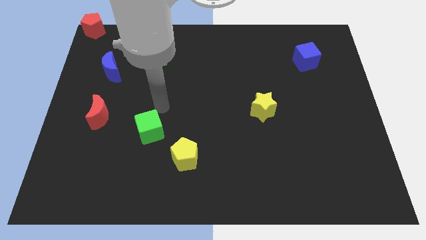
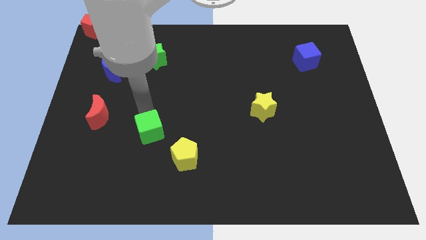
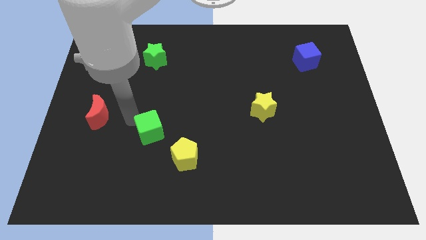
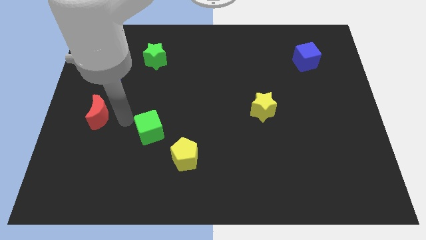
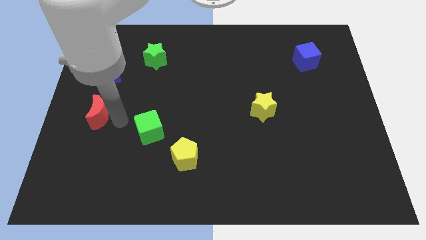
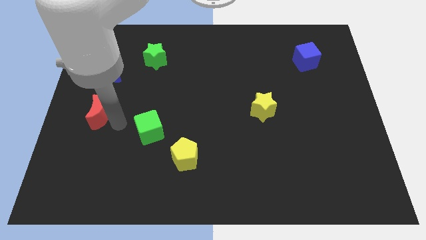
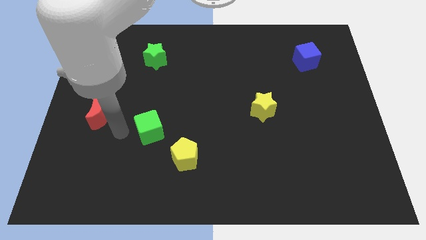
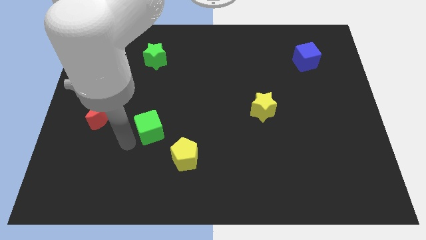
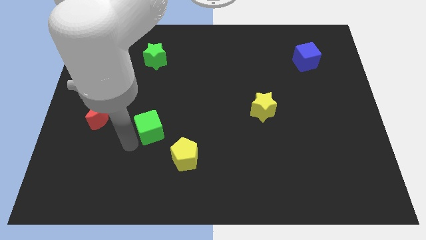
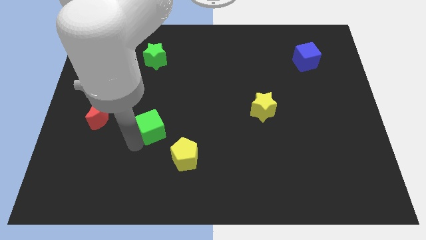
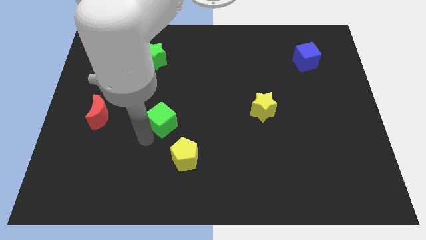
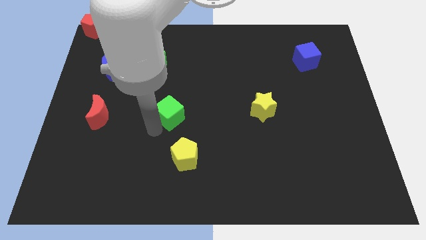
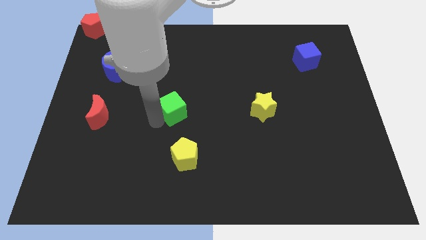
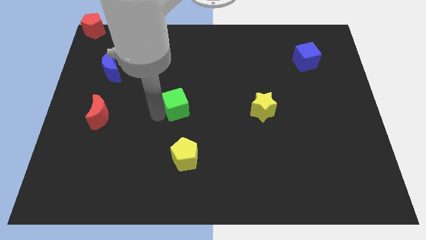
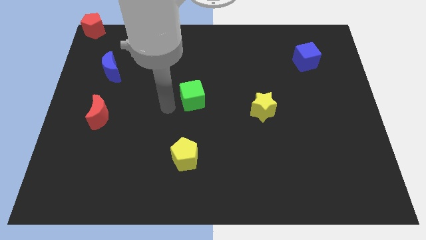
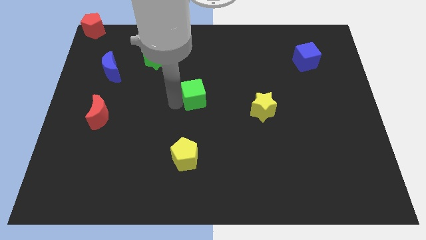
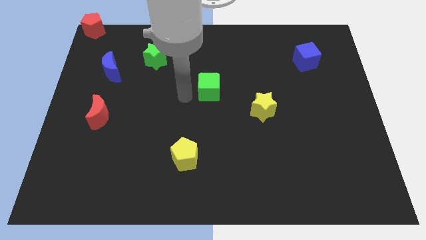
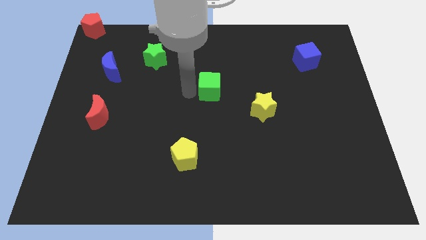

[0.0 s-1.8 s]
move the green cube to the center of the board

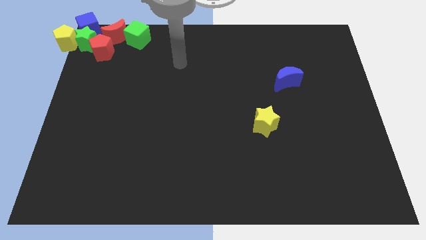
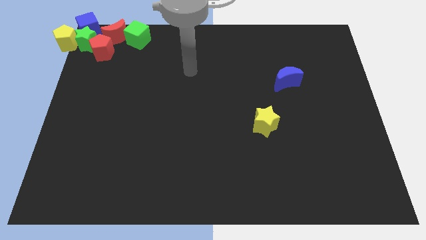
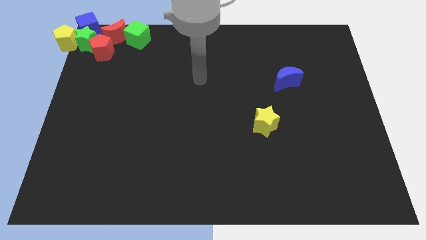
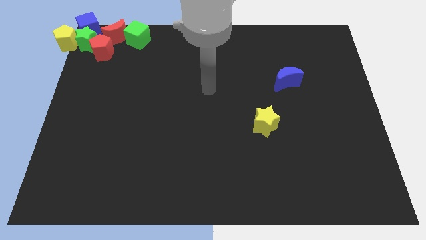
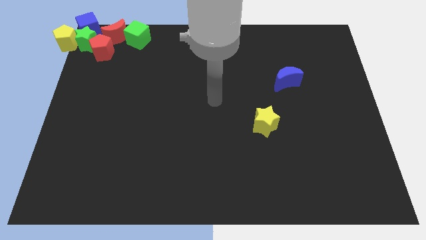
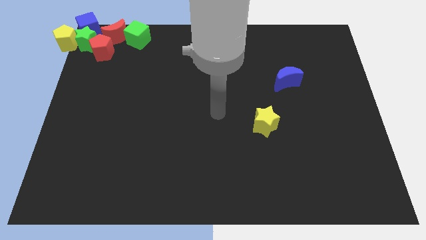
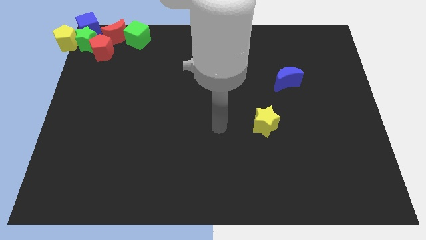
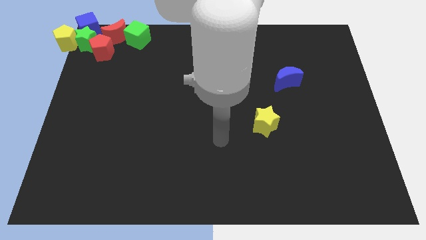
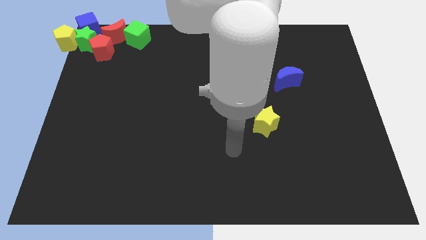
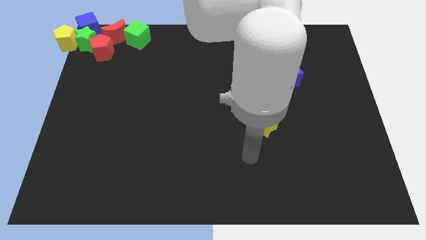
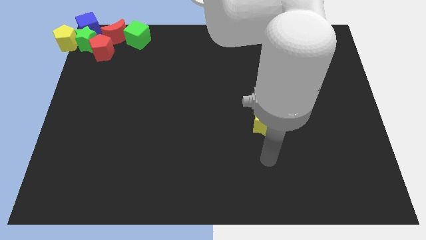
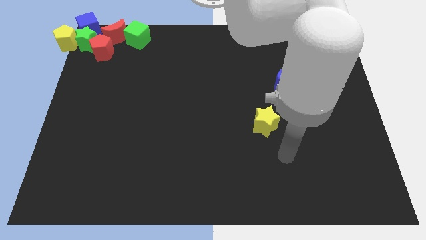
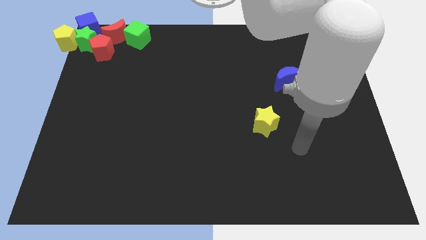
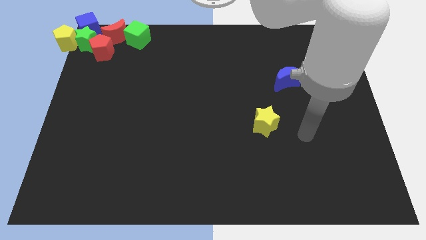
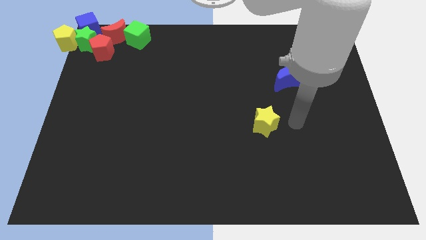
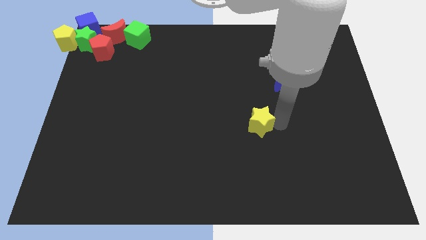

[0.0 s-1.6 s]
move your arm to the right of the yellow star

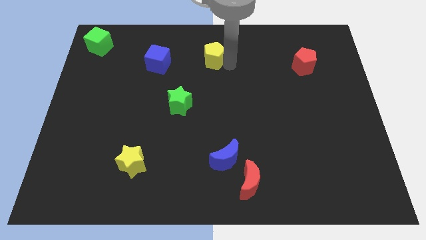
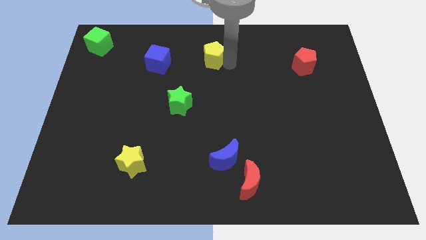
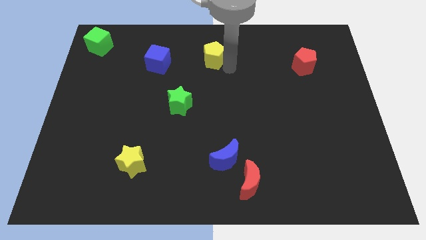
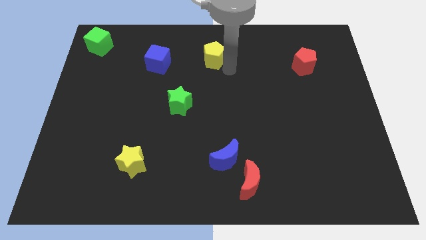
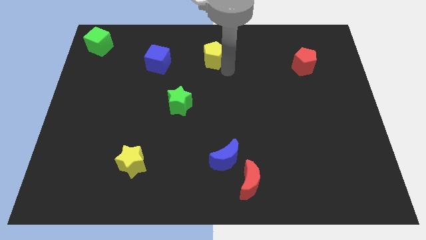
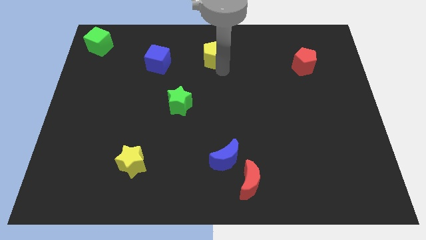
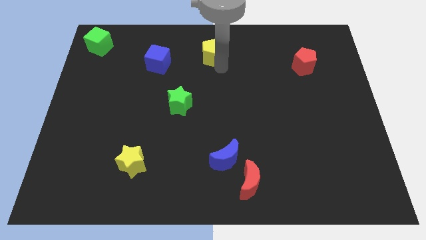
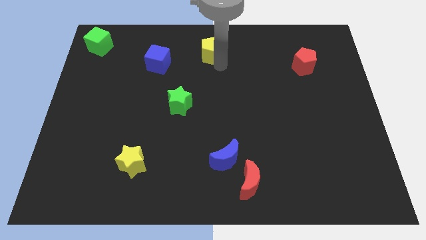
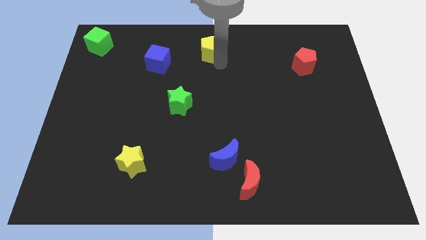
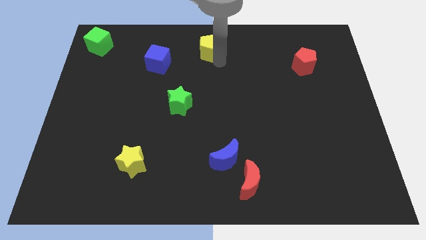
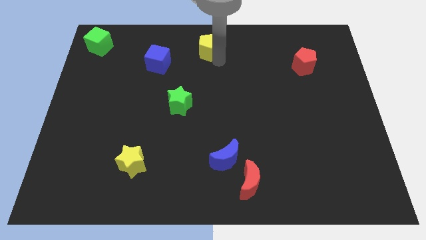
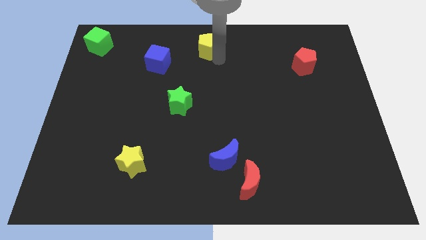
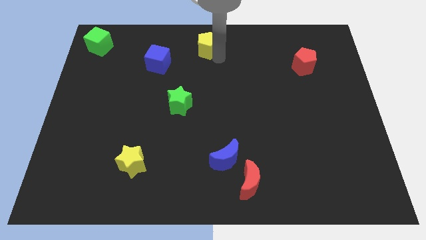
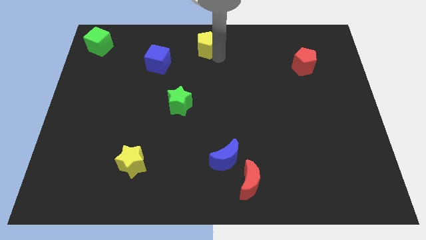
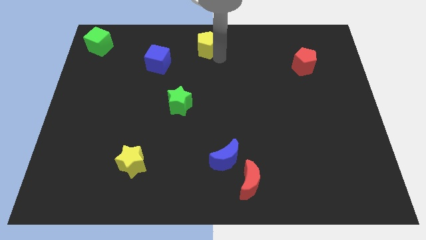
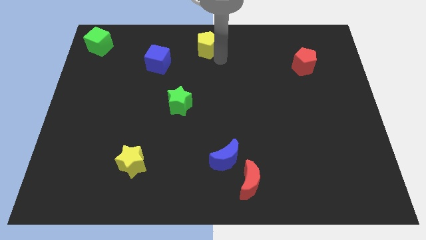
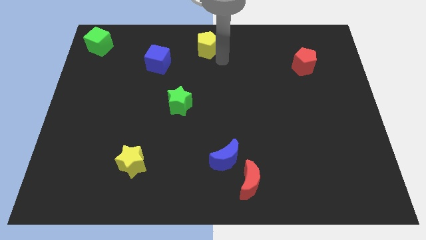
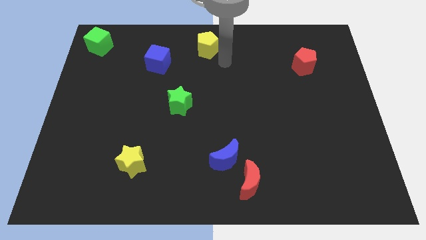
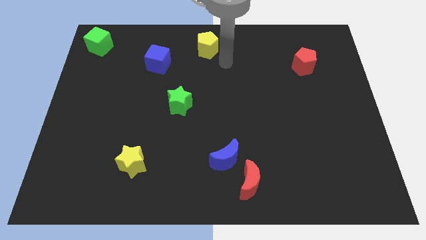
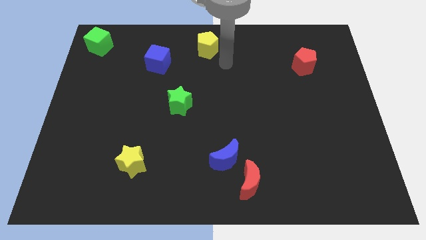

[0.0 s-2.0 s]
push yellow pentagon to the top center of the board

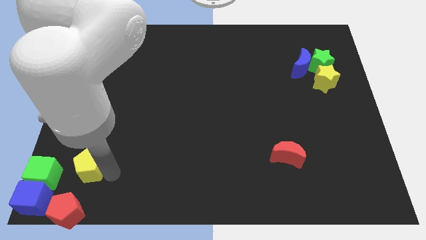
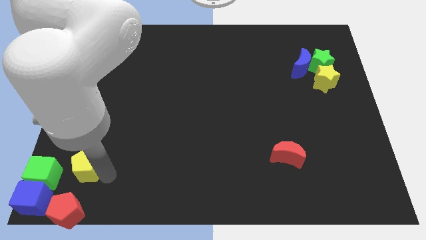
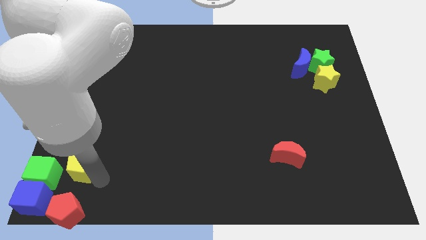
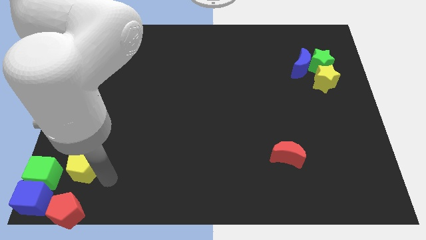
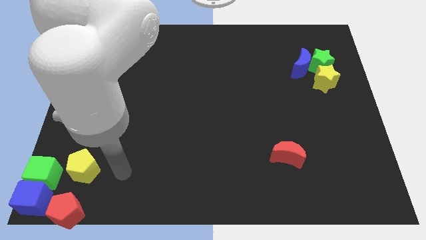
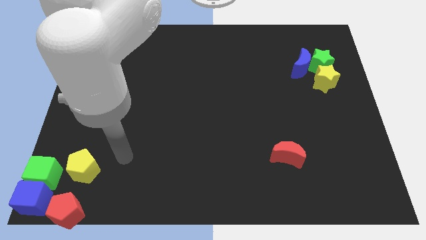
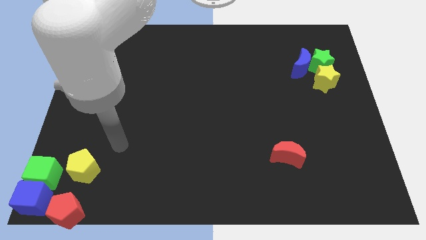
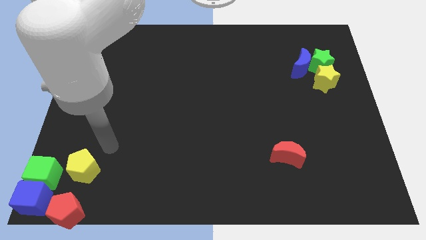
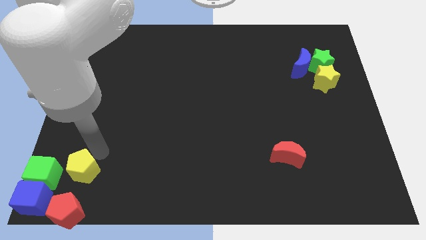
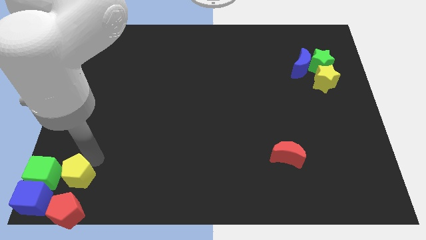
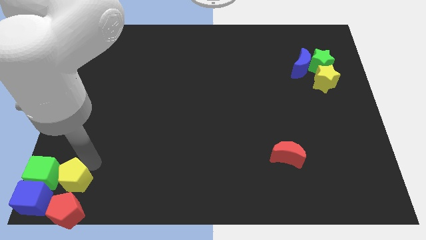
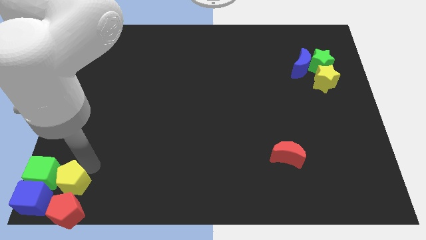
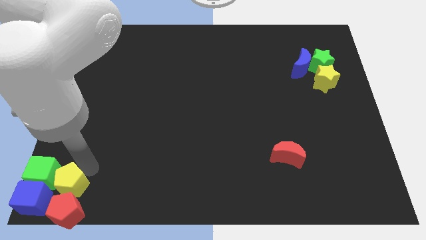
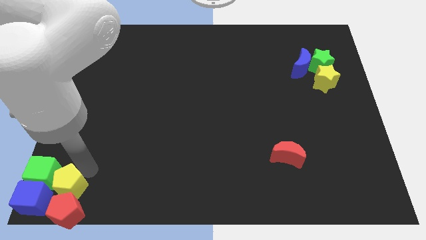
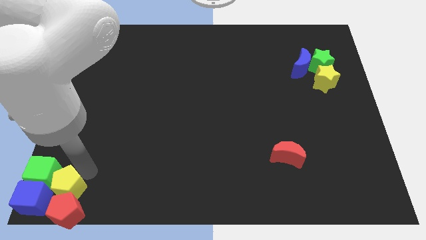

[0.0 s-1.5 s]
place yellow pentagon to the top of red pentagon

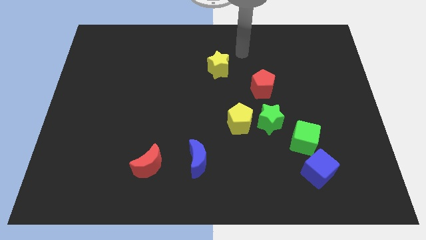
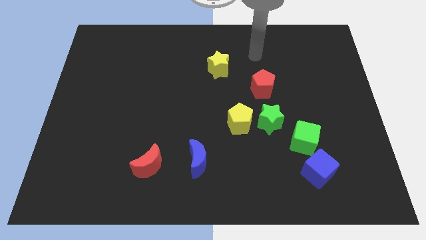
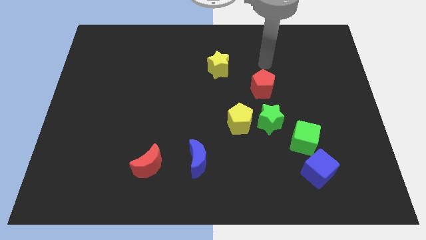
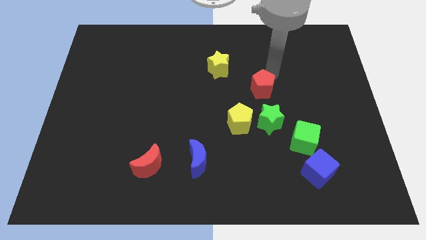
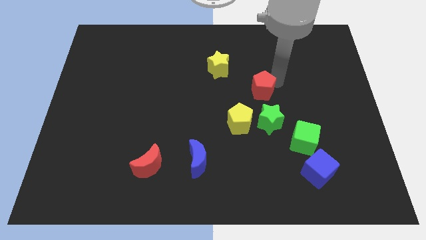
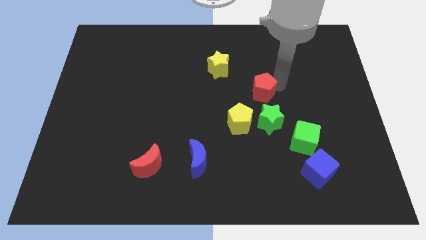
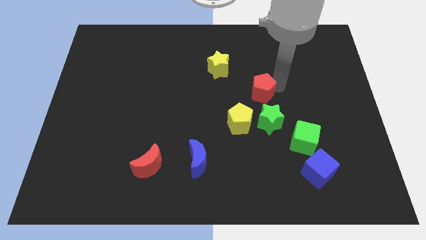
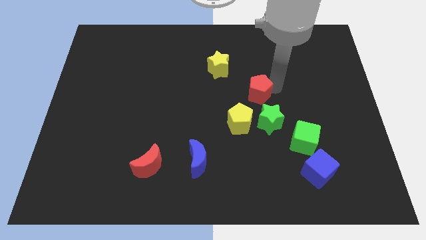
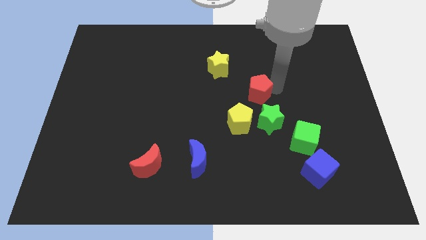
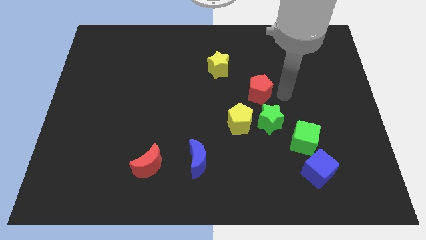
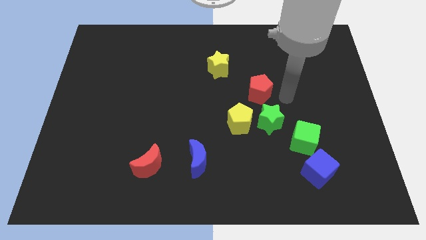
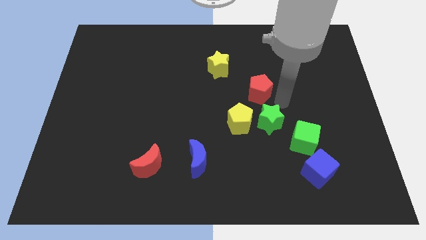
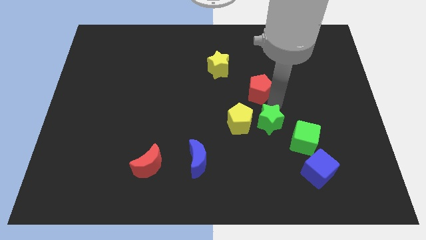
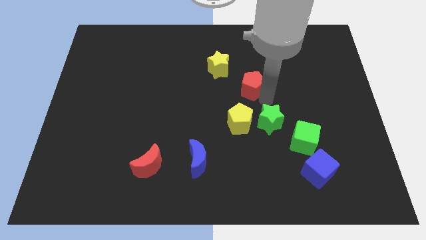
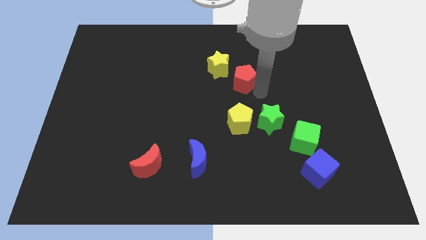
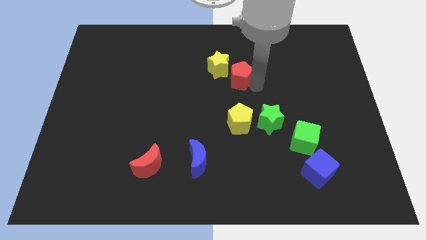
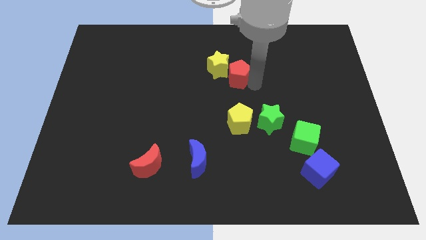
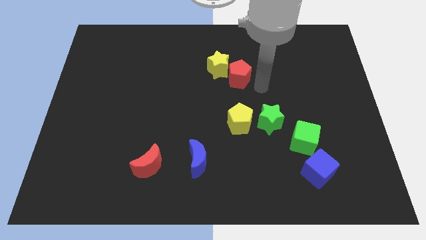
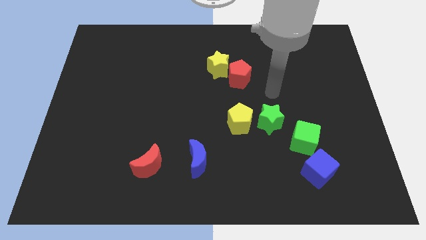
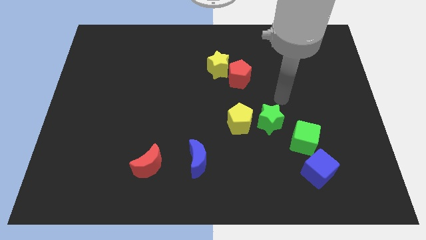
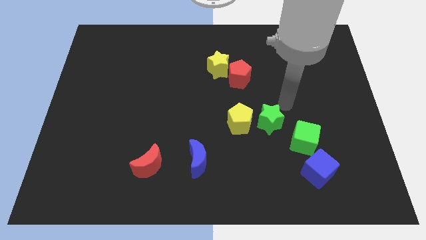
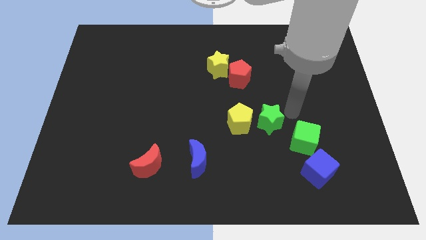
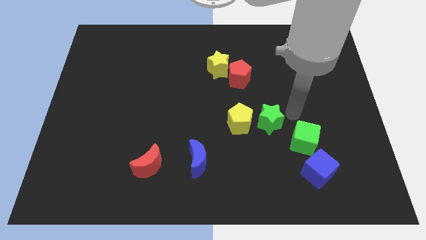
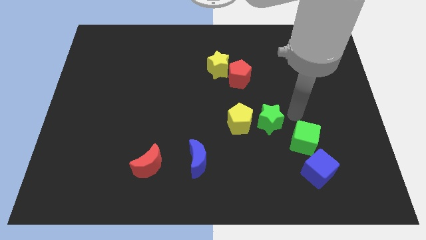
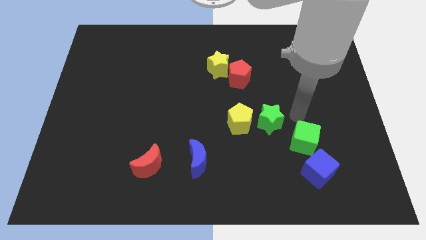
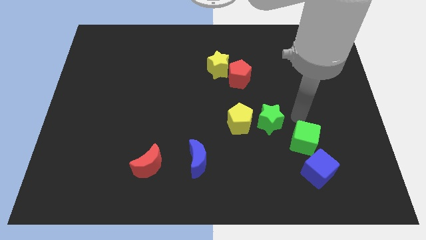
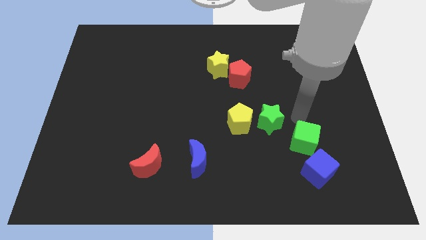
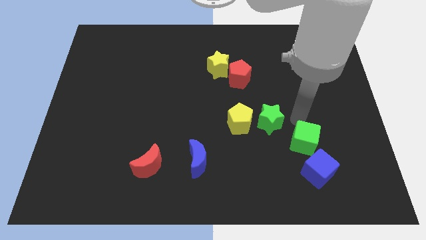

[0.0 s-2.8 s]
move red pentagon towards yellow star
